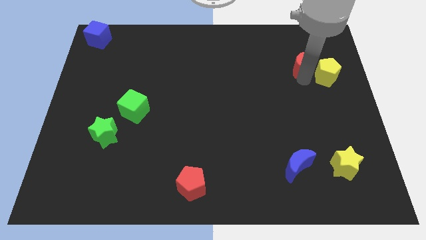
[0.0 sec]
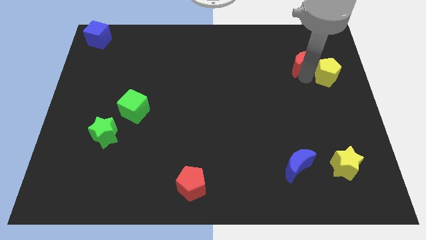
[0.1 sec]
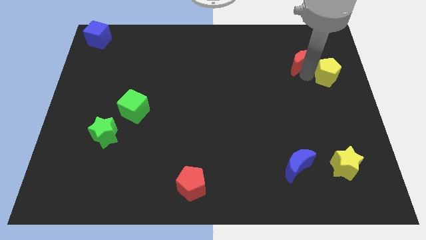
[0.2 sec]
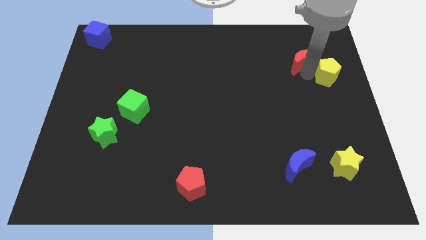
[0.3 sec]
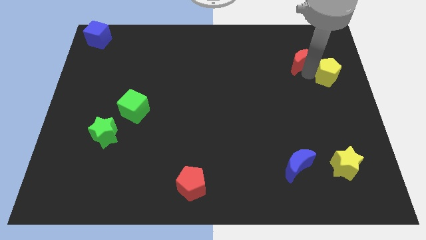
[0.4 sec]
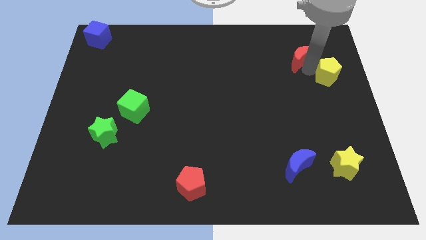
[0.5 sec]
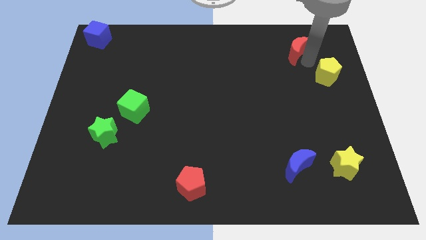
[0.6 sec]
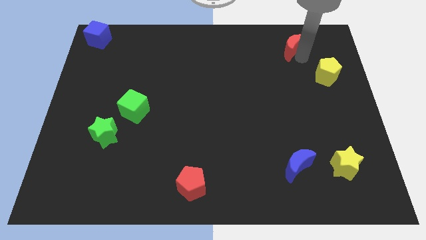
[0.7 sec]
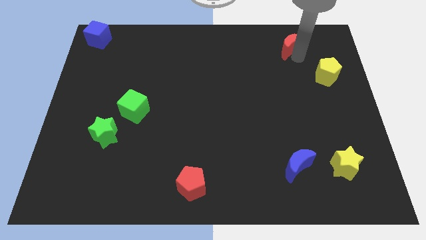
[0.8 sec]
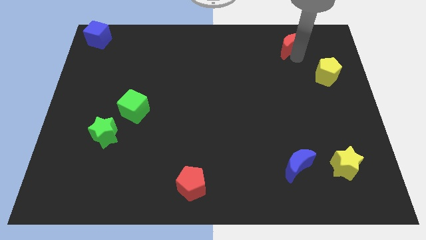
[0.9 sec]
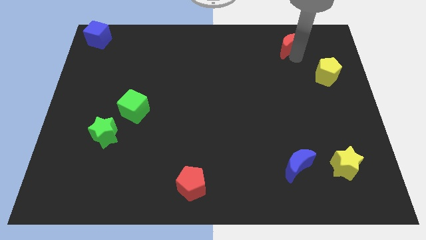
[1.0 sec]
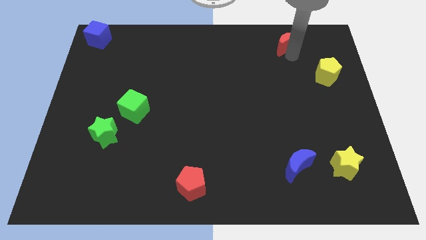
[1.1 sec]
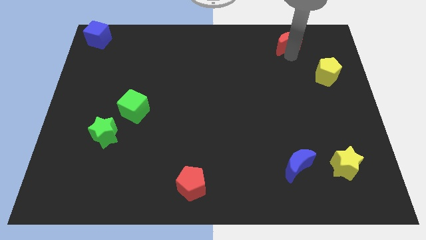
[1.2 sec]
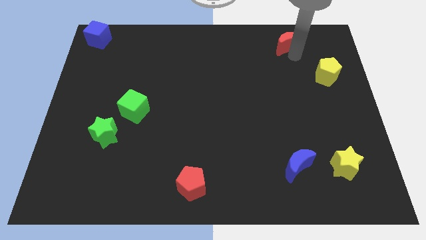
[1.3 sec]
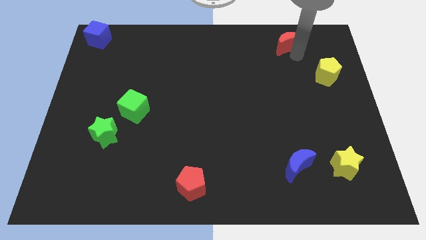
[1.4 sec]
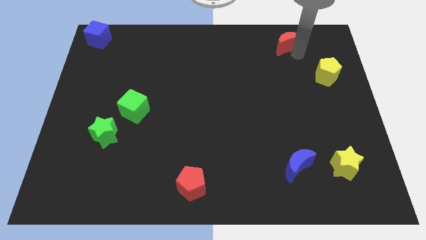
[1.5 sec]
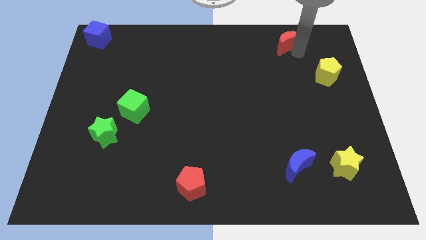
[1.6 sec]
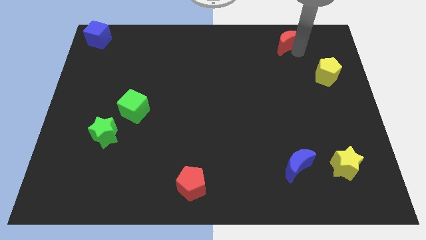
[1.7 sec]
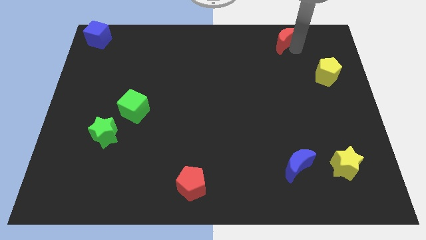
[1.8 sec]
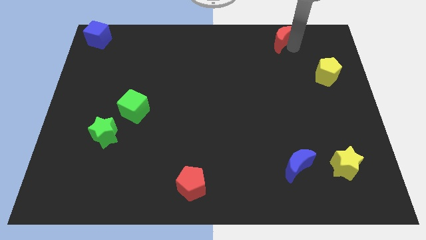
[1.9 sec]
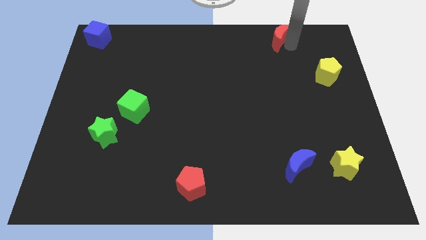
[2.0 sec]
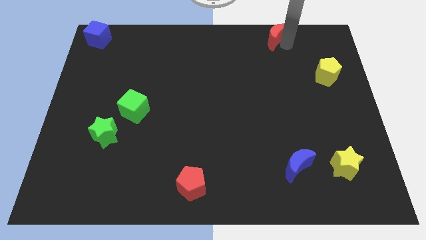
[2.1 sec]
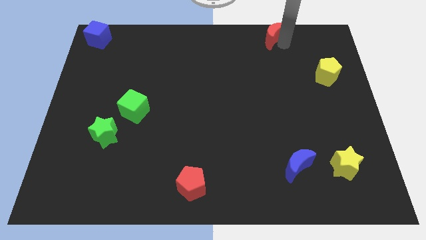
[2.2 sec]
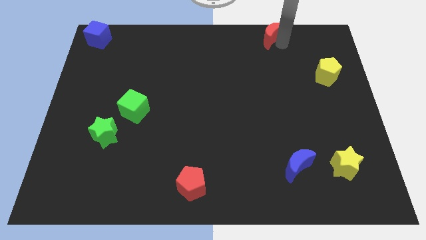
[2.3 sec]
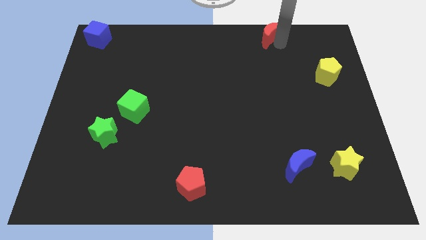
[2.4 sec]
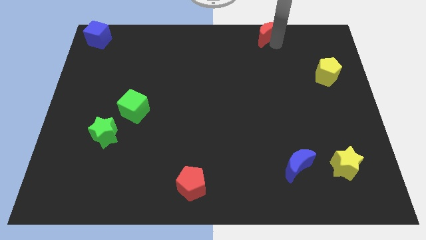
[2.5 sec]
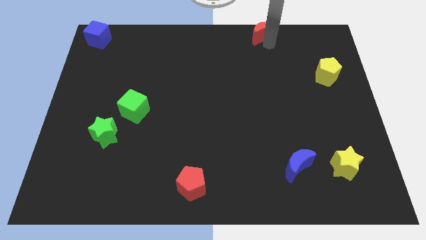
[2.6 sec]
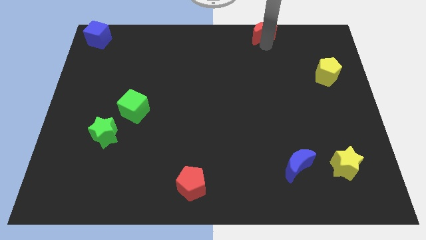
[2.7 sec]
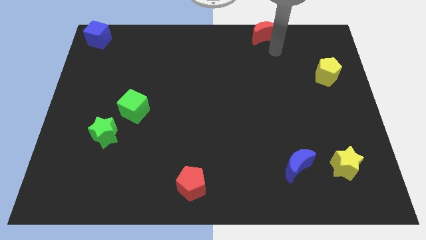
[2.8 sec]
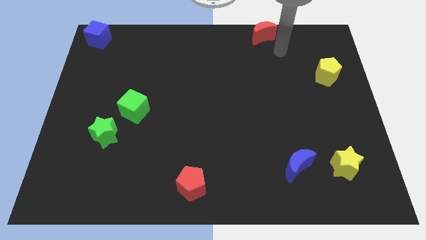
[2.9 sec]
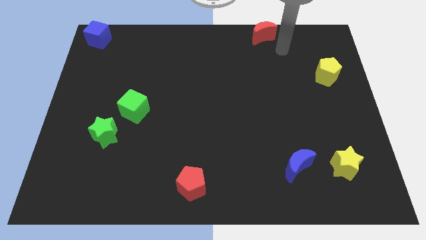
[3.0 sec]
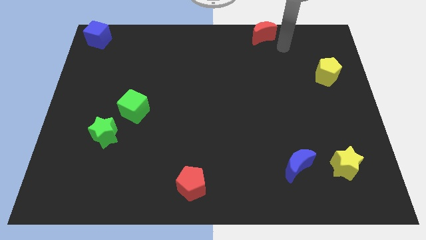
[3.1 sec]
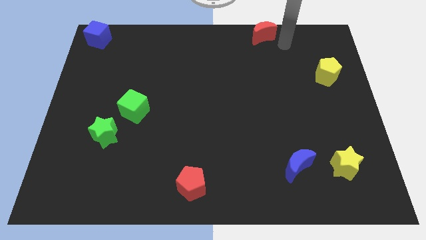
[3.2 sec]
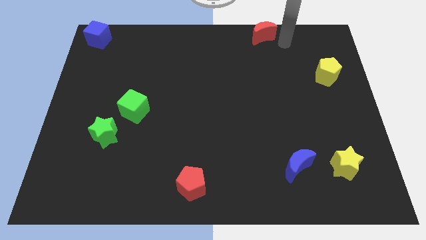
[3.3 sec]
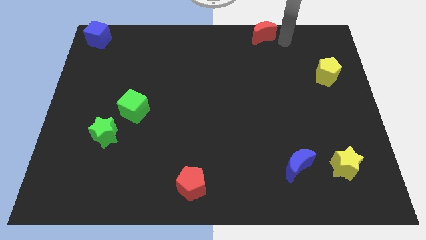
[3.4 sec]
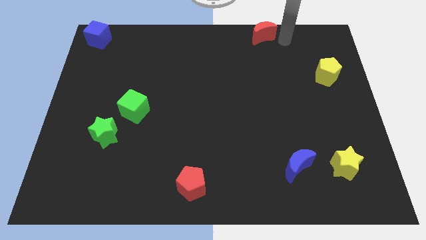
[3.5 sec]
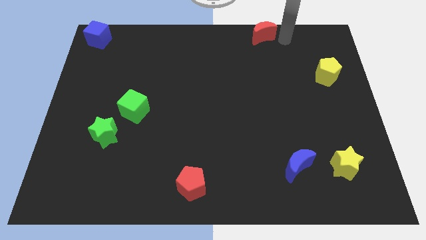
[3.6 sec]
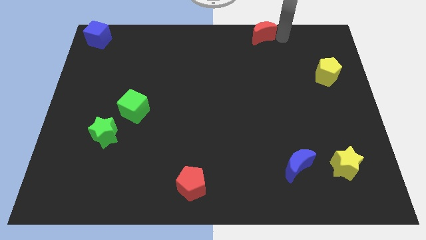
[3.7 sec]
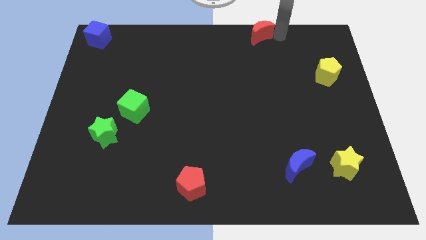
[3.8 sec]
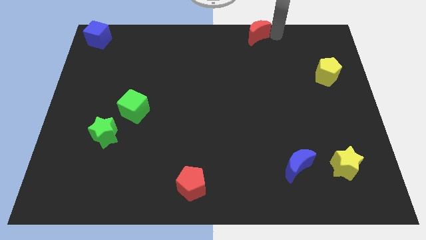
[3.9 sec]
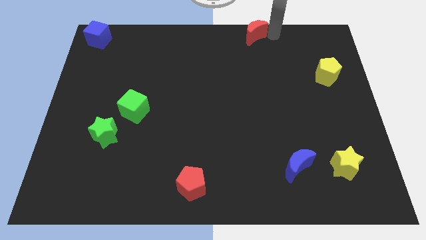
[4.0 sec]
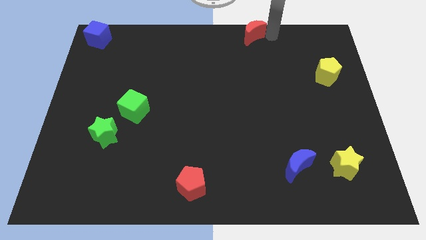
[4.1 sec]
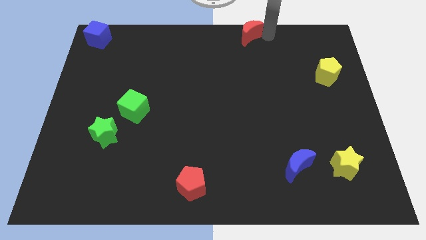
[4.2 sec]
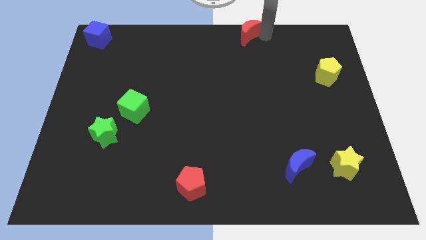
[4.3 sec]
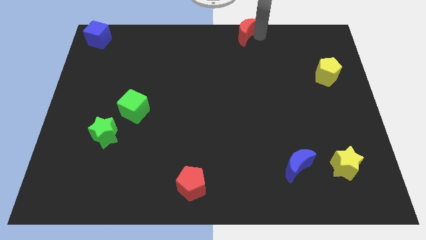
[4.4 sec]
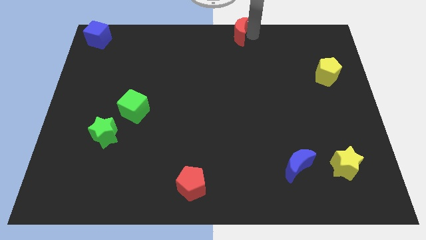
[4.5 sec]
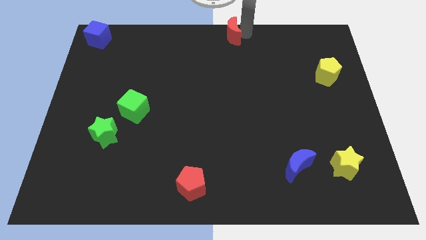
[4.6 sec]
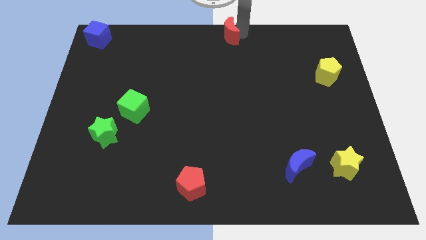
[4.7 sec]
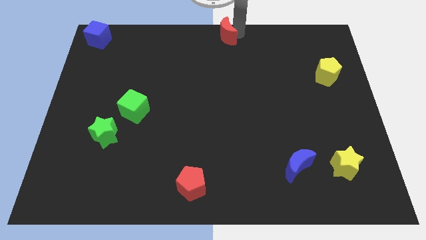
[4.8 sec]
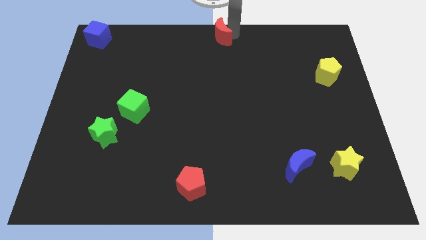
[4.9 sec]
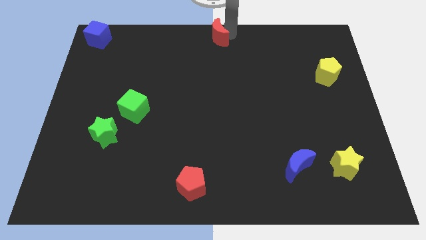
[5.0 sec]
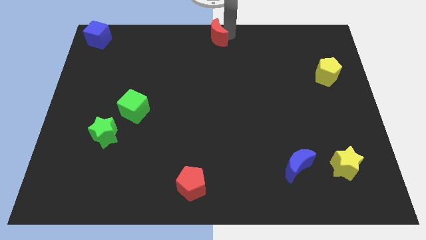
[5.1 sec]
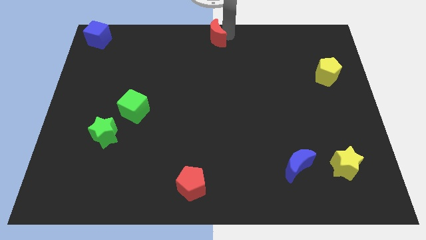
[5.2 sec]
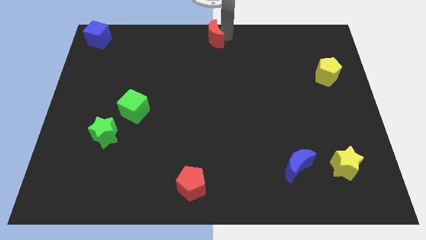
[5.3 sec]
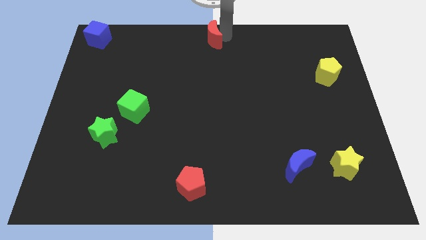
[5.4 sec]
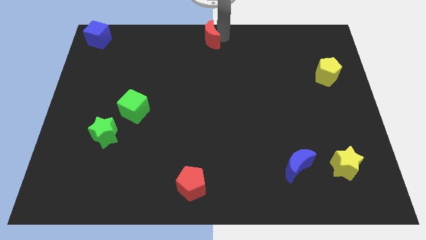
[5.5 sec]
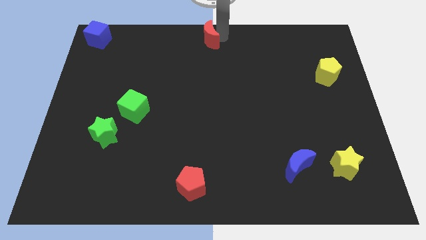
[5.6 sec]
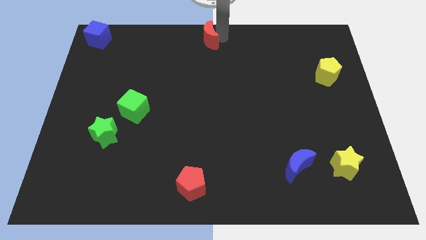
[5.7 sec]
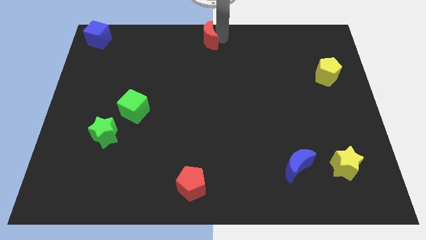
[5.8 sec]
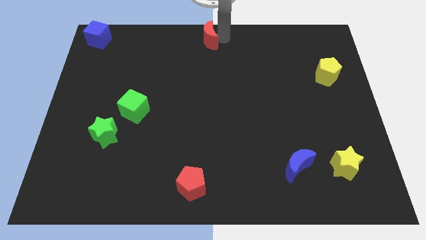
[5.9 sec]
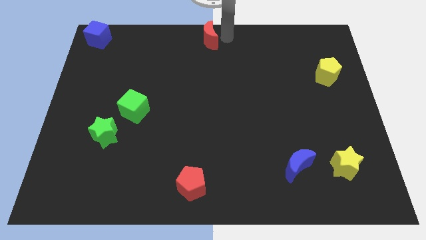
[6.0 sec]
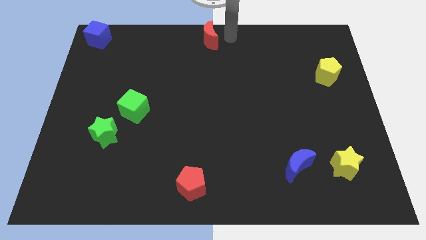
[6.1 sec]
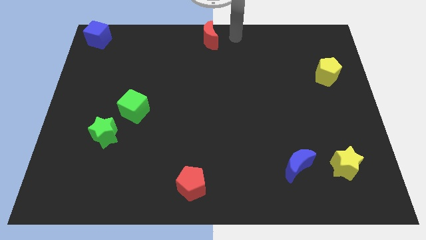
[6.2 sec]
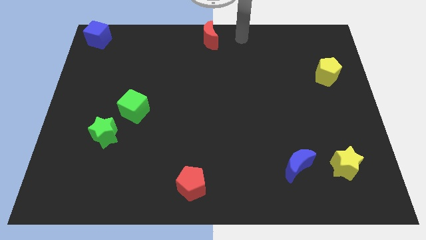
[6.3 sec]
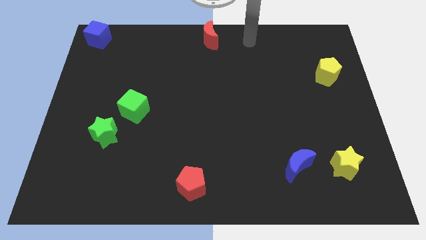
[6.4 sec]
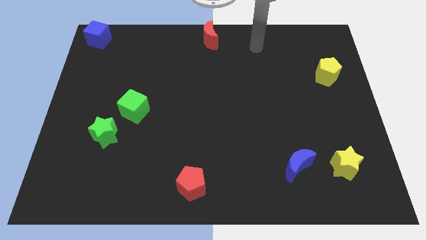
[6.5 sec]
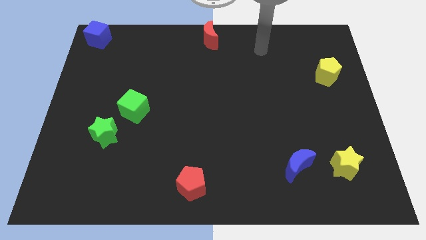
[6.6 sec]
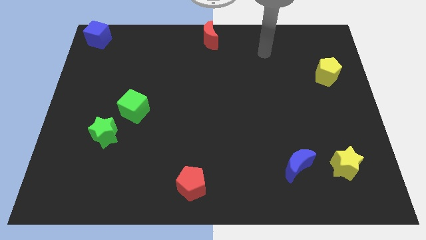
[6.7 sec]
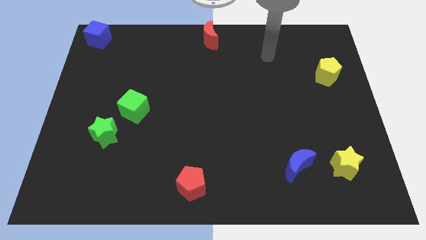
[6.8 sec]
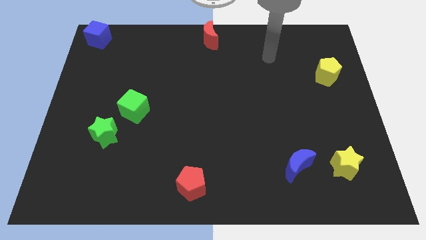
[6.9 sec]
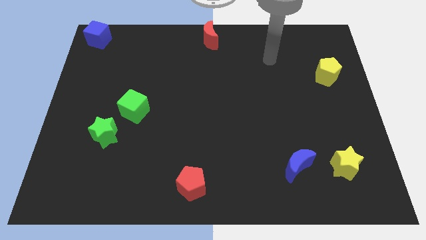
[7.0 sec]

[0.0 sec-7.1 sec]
place the red moon at the top center of the board

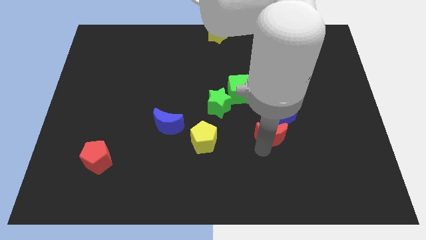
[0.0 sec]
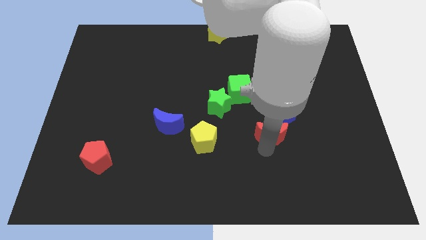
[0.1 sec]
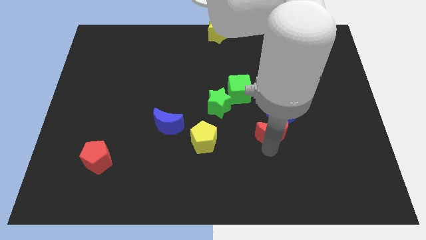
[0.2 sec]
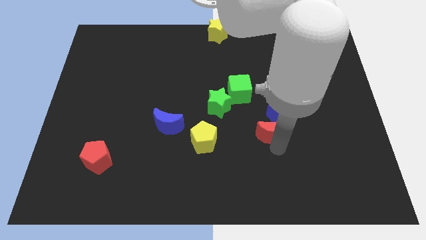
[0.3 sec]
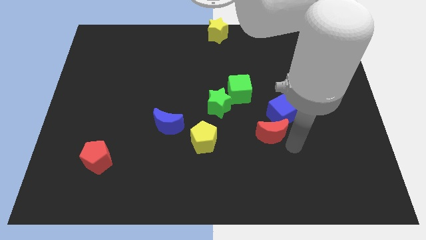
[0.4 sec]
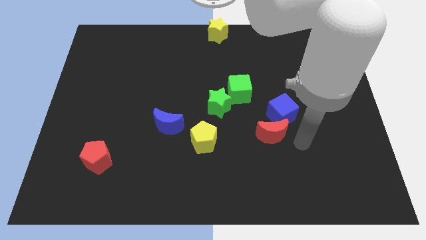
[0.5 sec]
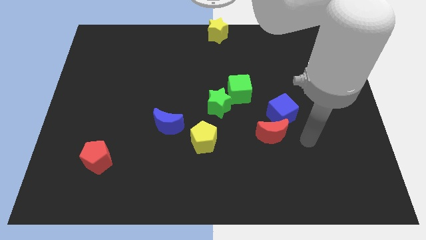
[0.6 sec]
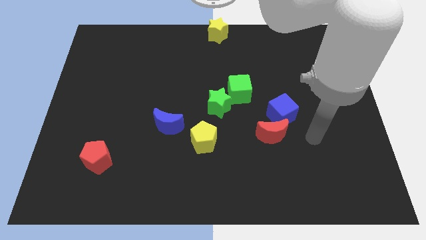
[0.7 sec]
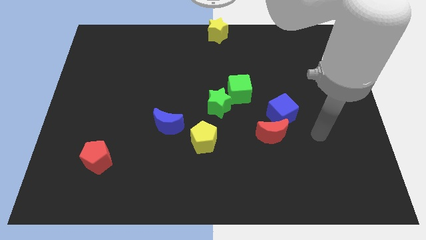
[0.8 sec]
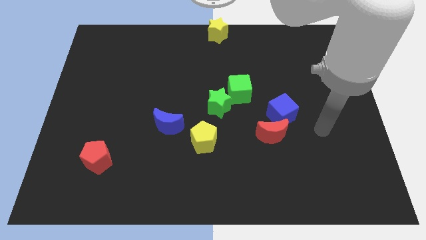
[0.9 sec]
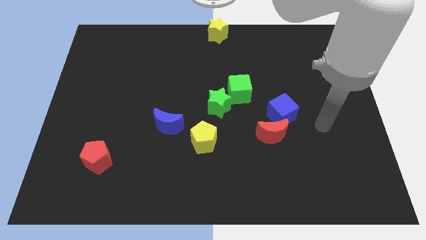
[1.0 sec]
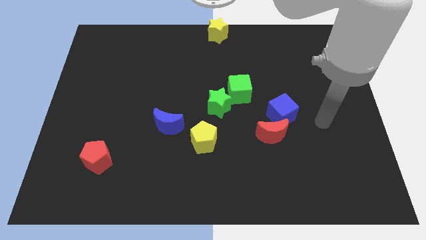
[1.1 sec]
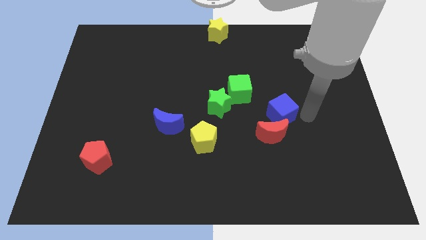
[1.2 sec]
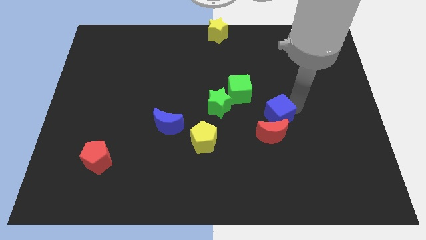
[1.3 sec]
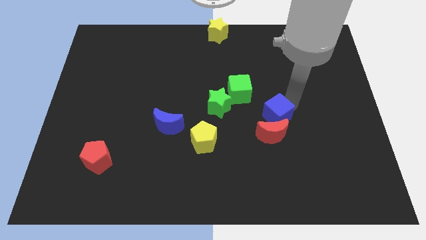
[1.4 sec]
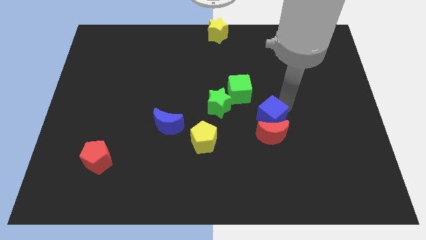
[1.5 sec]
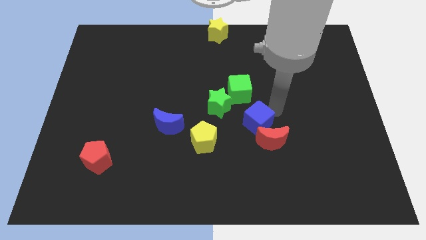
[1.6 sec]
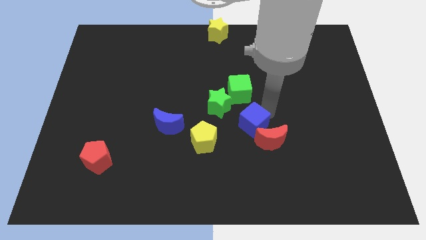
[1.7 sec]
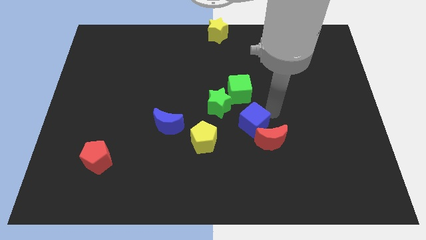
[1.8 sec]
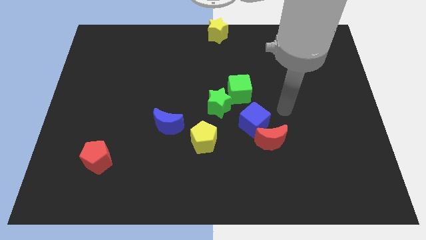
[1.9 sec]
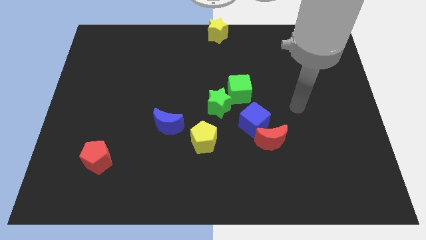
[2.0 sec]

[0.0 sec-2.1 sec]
slightly move the blue cube down to the green cube
